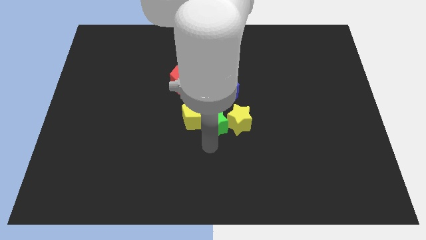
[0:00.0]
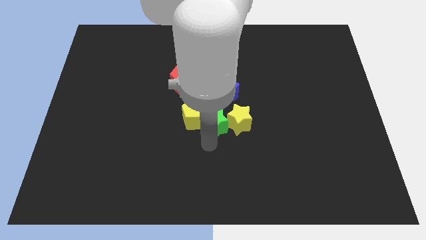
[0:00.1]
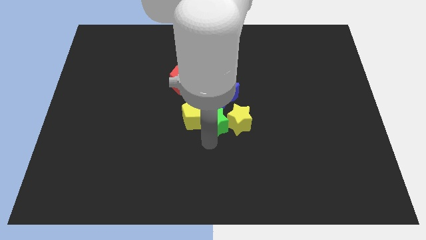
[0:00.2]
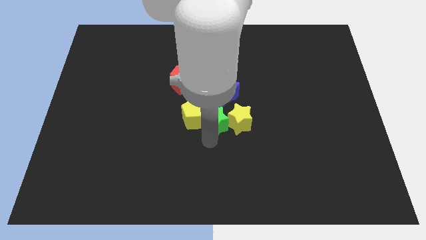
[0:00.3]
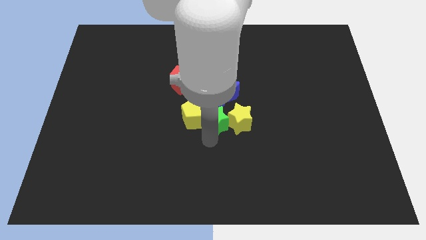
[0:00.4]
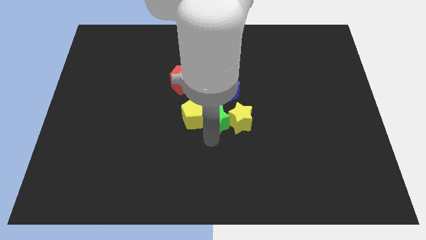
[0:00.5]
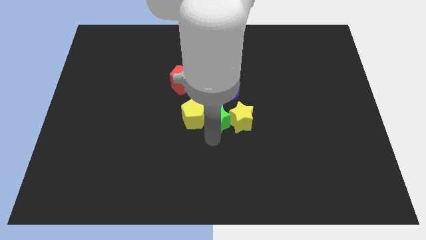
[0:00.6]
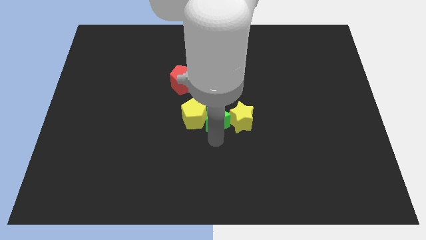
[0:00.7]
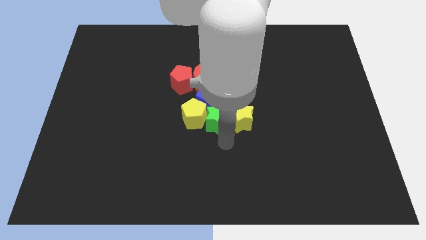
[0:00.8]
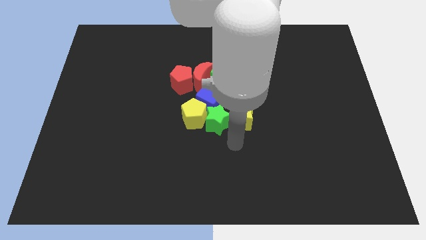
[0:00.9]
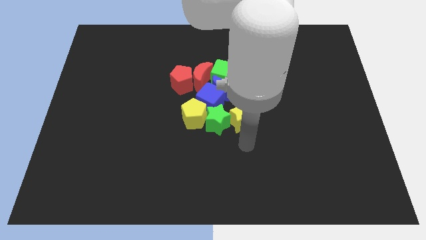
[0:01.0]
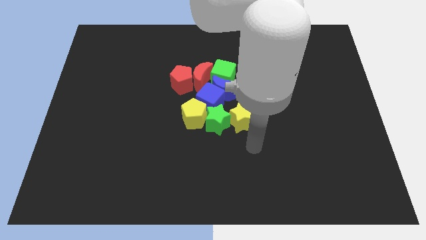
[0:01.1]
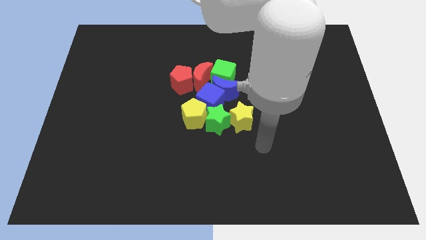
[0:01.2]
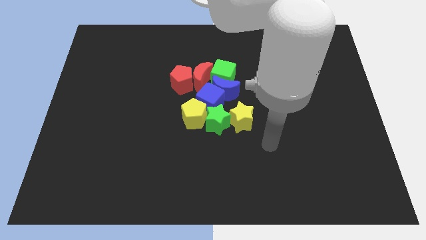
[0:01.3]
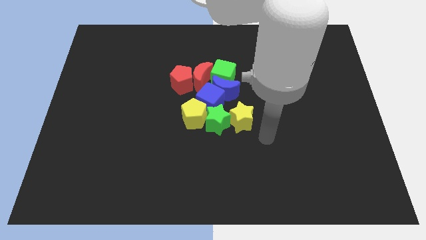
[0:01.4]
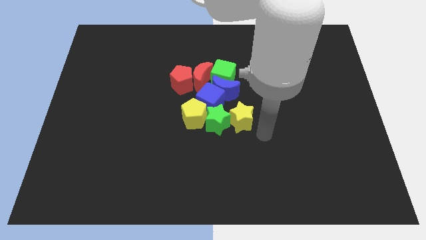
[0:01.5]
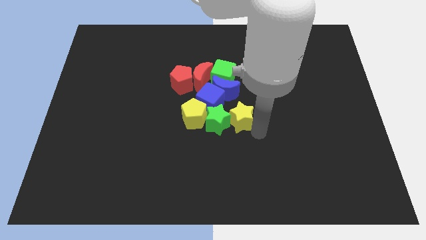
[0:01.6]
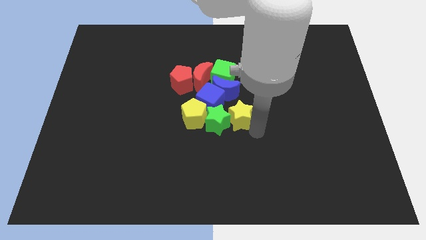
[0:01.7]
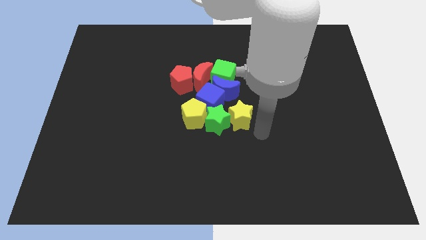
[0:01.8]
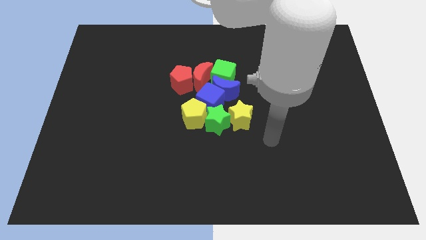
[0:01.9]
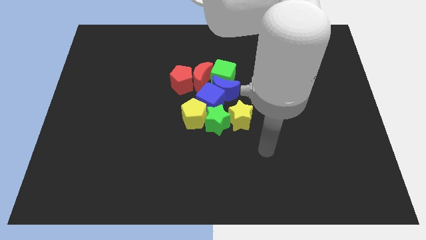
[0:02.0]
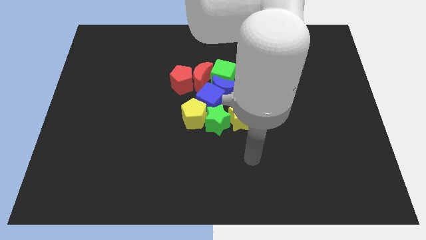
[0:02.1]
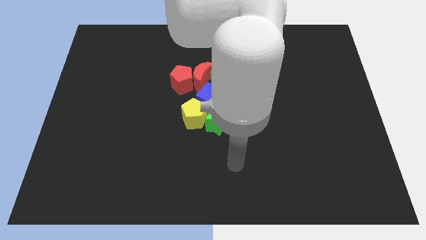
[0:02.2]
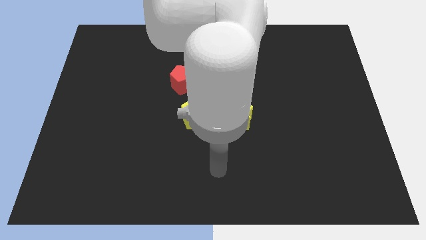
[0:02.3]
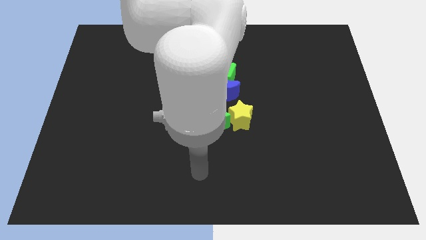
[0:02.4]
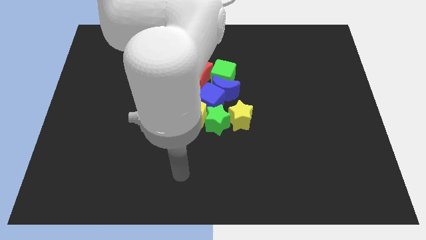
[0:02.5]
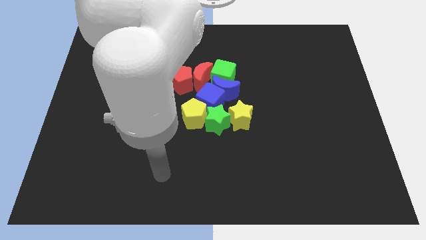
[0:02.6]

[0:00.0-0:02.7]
move your arm to the bottom center of the board

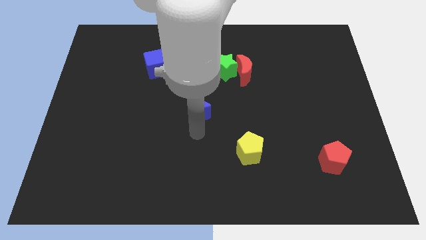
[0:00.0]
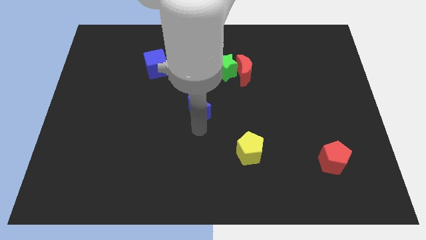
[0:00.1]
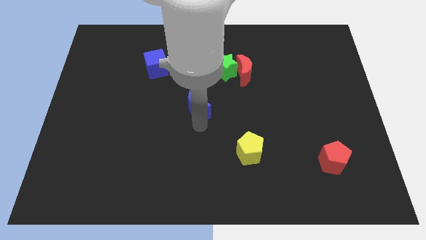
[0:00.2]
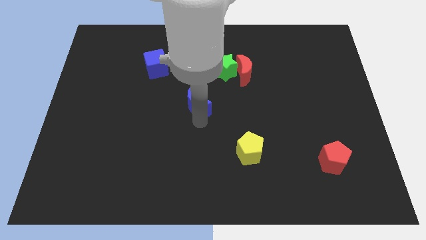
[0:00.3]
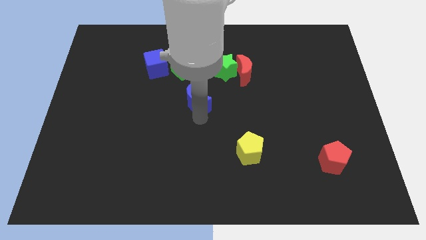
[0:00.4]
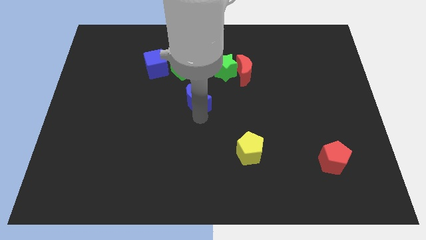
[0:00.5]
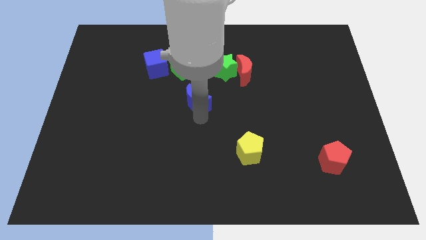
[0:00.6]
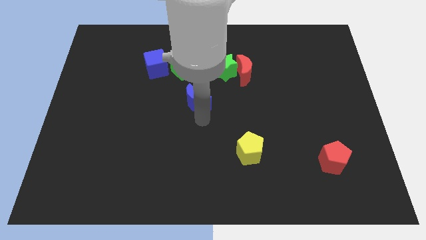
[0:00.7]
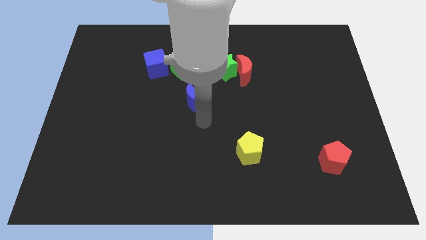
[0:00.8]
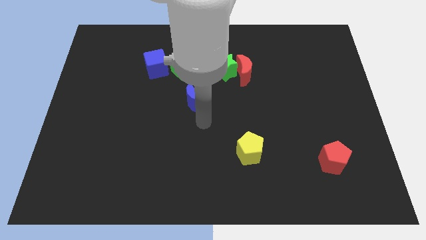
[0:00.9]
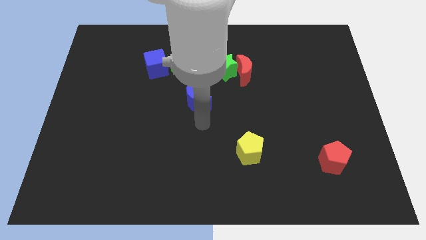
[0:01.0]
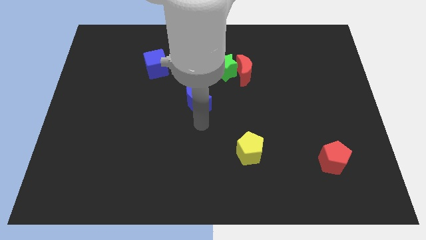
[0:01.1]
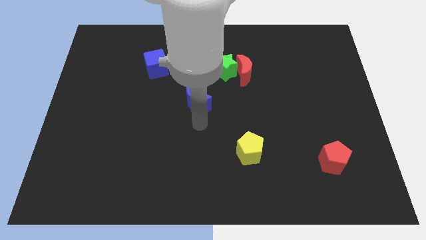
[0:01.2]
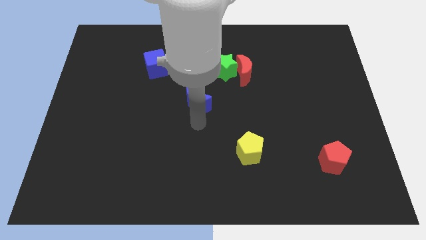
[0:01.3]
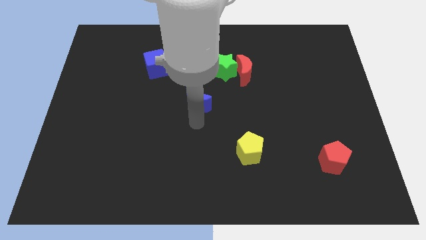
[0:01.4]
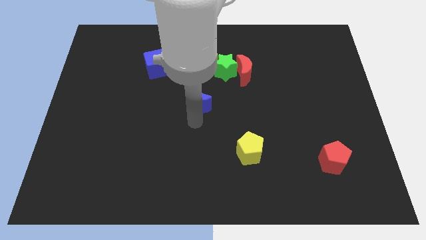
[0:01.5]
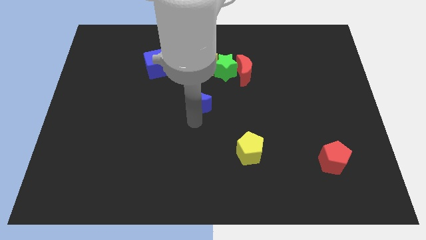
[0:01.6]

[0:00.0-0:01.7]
move the blue crescent towards yellow star

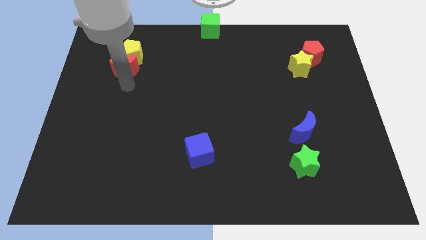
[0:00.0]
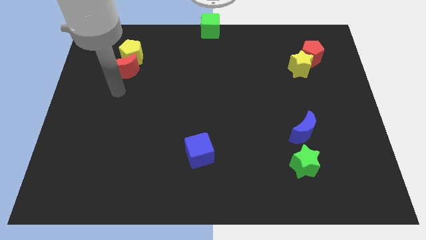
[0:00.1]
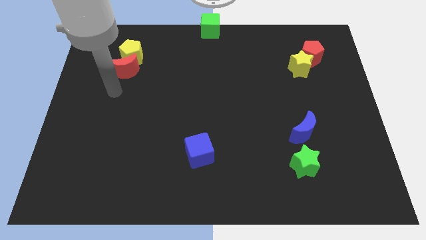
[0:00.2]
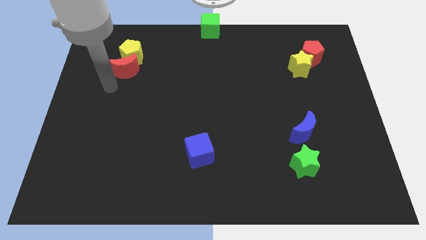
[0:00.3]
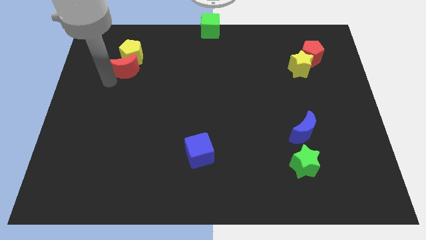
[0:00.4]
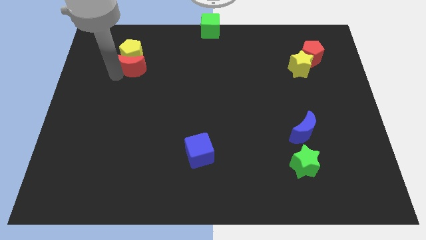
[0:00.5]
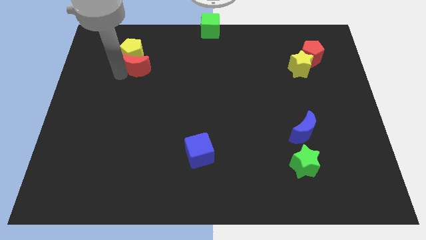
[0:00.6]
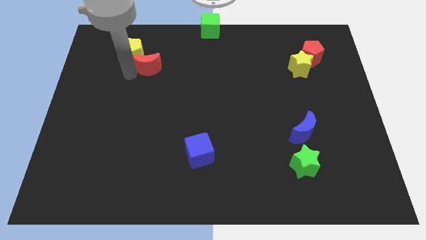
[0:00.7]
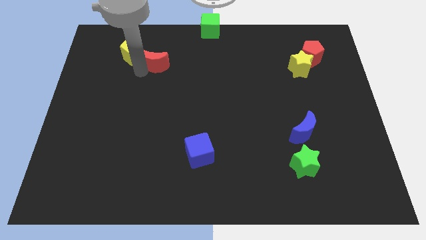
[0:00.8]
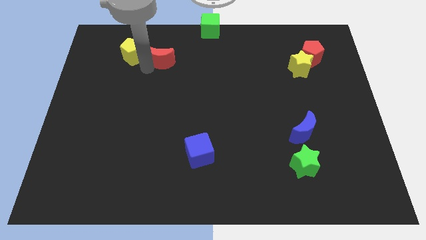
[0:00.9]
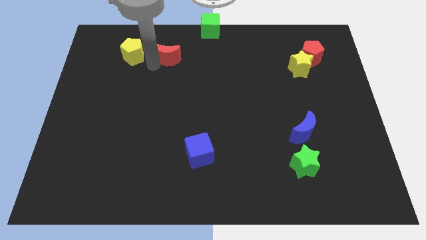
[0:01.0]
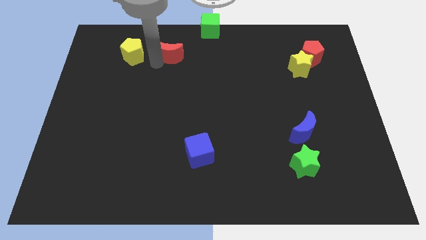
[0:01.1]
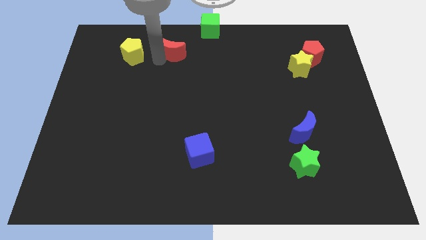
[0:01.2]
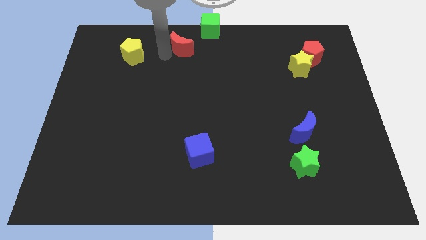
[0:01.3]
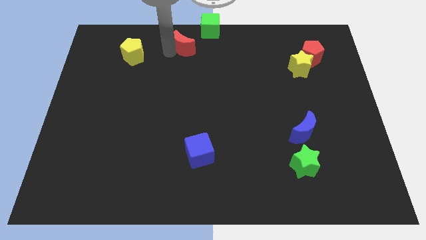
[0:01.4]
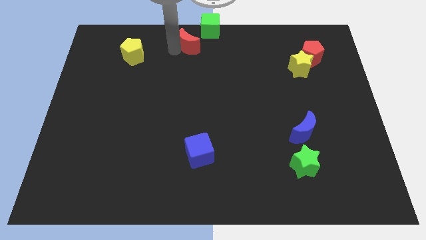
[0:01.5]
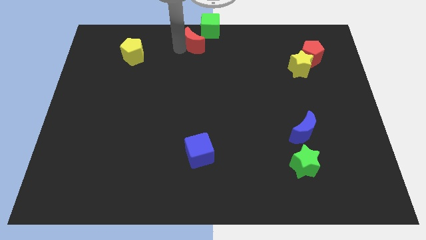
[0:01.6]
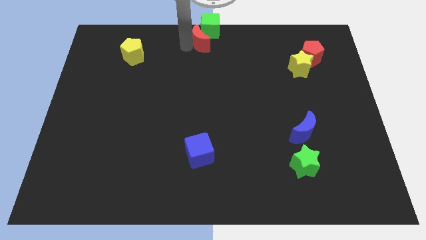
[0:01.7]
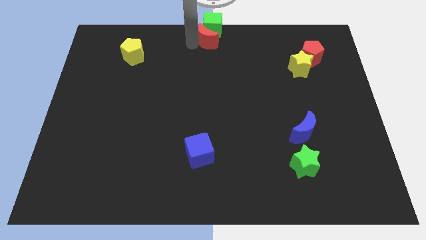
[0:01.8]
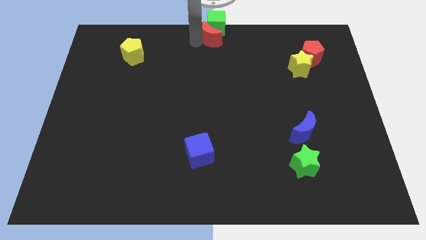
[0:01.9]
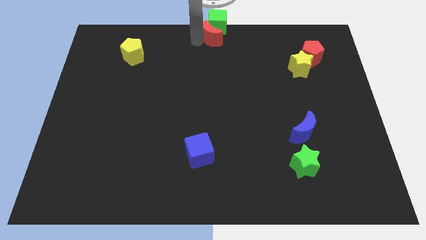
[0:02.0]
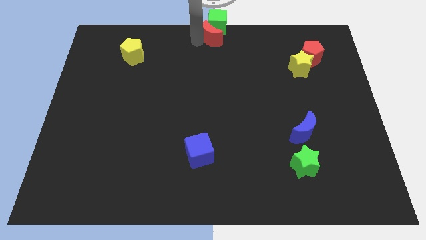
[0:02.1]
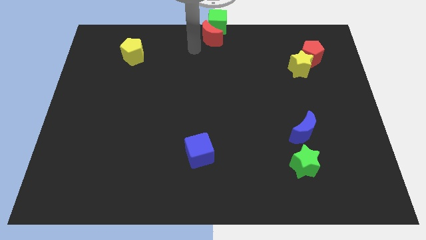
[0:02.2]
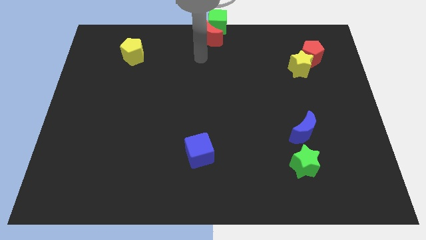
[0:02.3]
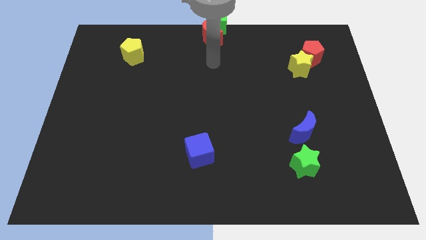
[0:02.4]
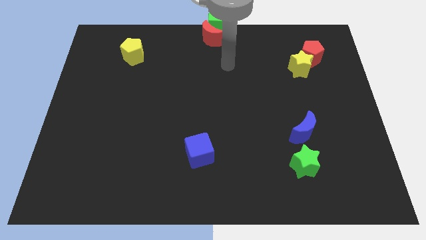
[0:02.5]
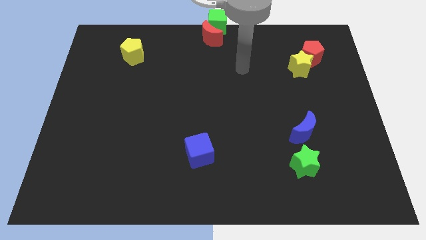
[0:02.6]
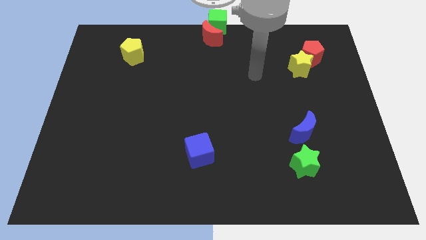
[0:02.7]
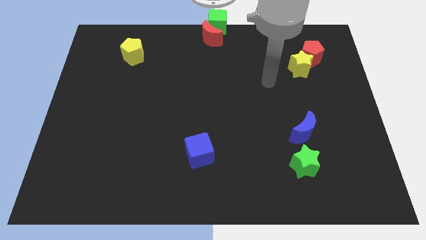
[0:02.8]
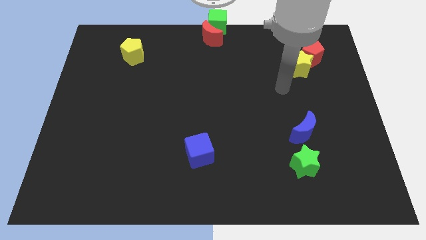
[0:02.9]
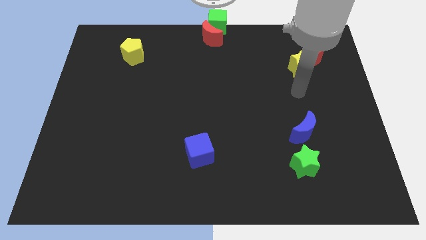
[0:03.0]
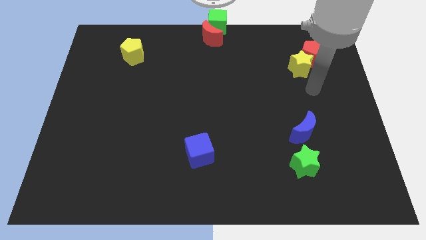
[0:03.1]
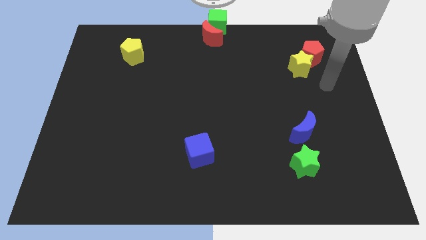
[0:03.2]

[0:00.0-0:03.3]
place the red crescent below the green cube

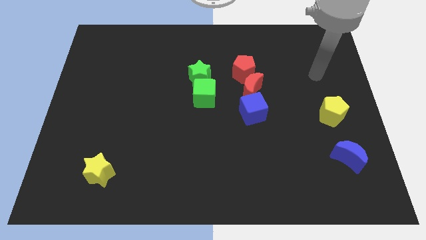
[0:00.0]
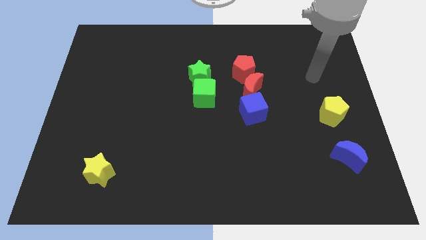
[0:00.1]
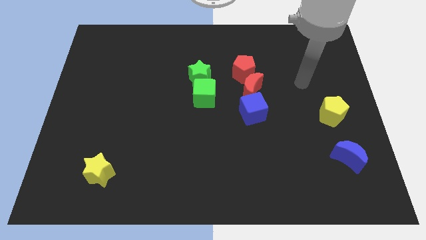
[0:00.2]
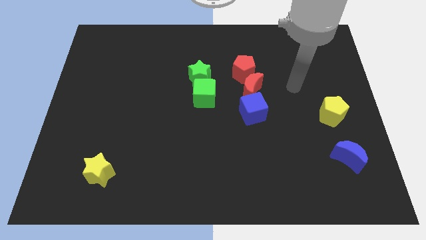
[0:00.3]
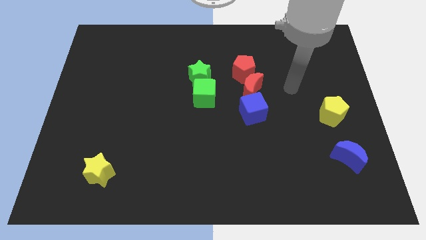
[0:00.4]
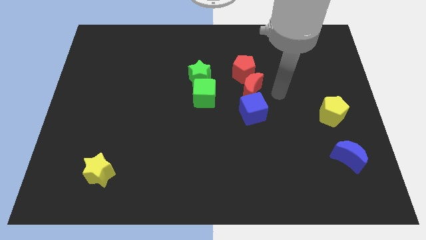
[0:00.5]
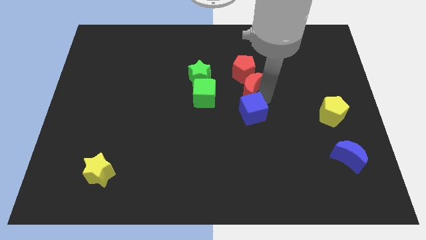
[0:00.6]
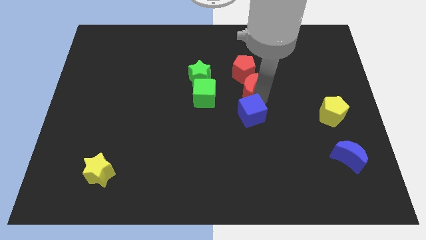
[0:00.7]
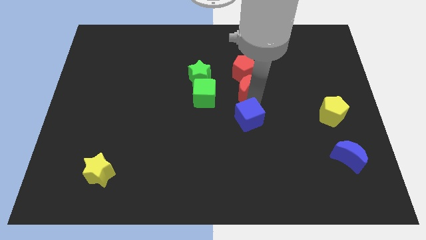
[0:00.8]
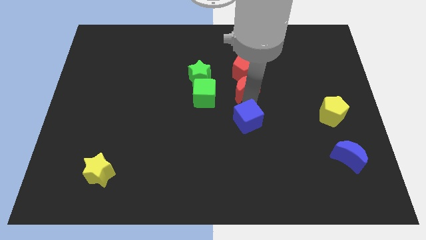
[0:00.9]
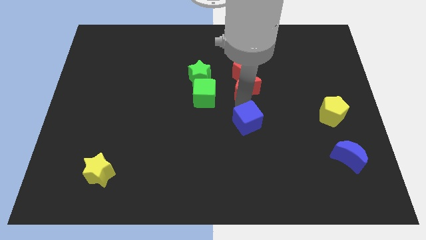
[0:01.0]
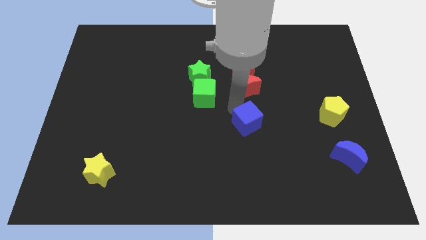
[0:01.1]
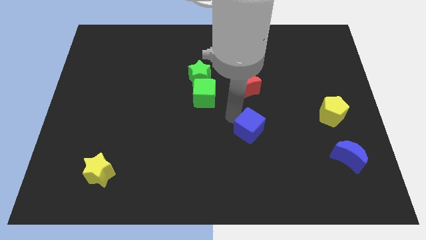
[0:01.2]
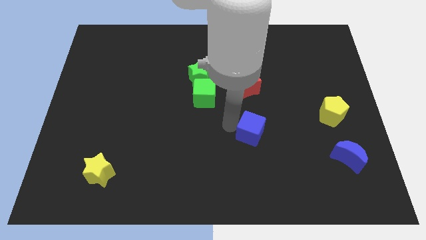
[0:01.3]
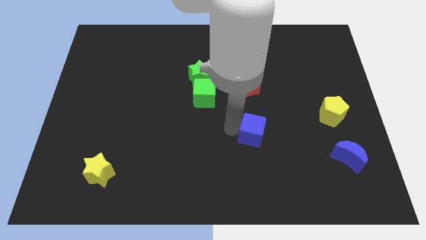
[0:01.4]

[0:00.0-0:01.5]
separate the blue cube from red crescent
